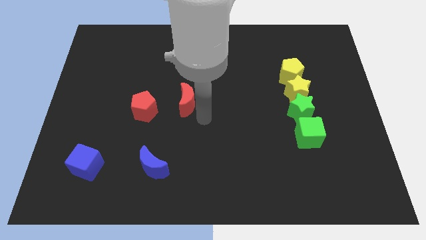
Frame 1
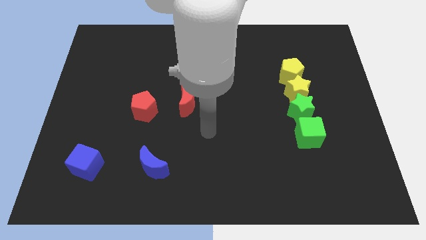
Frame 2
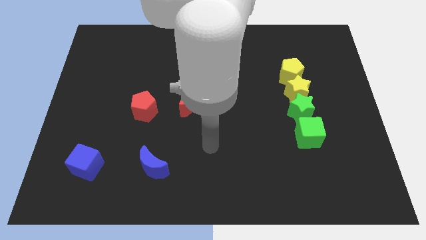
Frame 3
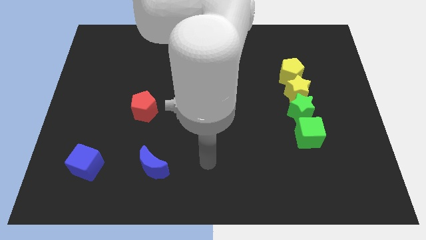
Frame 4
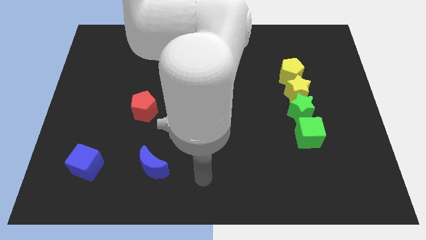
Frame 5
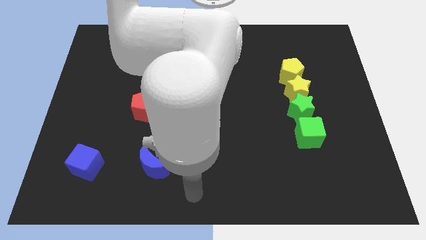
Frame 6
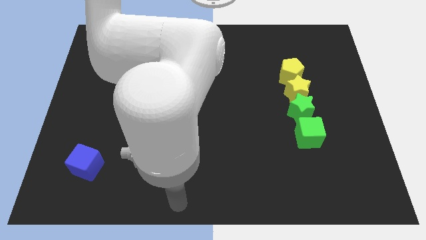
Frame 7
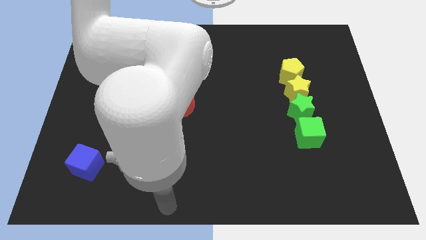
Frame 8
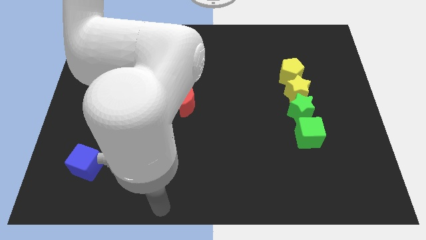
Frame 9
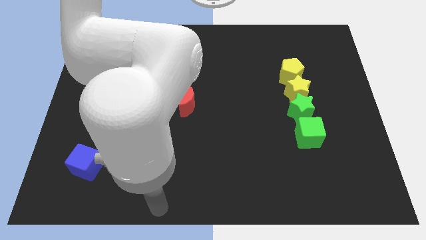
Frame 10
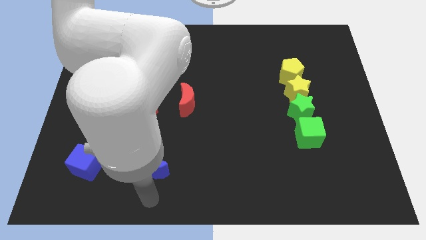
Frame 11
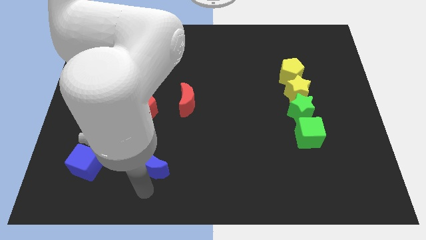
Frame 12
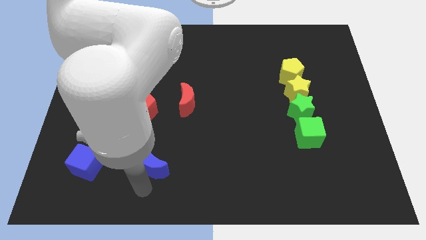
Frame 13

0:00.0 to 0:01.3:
move your hand towards the bottom of the blue crescent

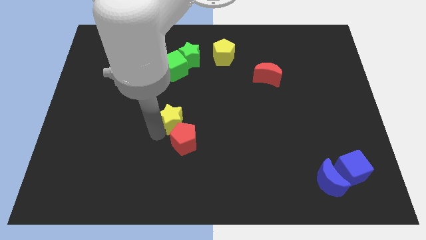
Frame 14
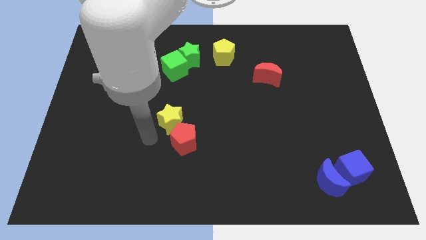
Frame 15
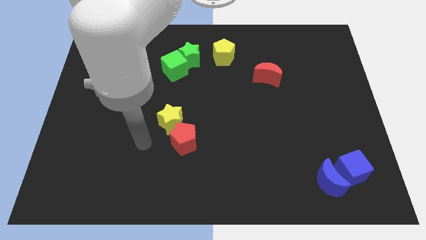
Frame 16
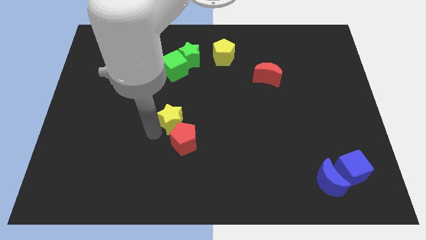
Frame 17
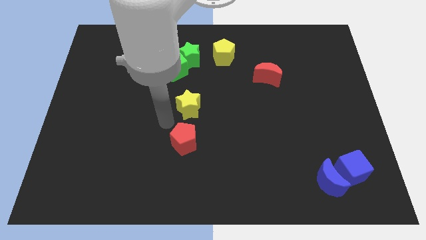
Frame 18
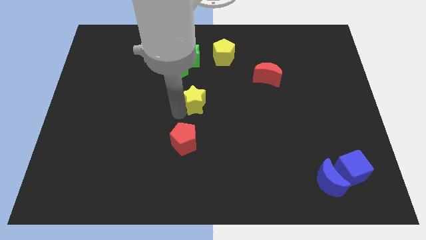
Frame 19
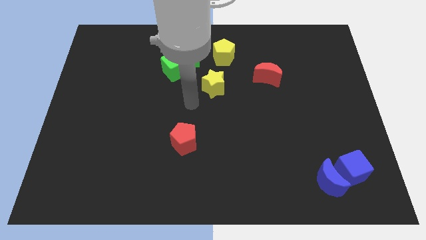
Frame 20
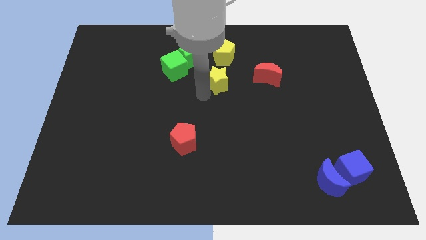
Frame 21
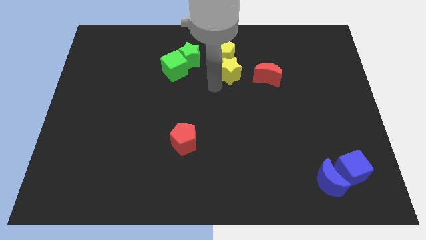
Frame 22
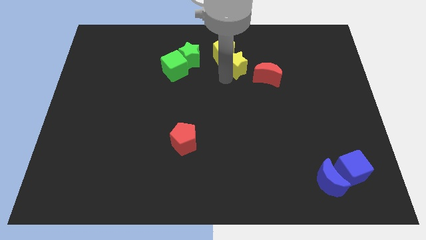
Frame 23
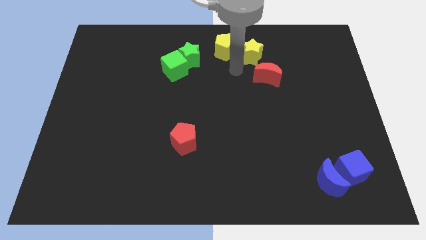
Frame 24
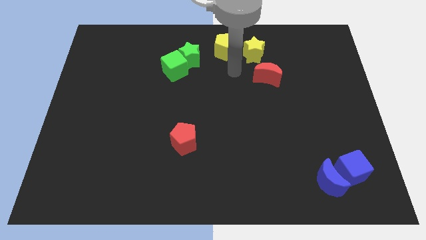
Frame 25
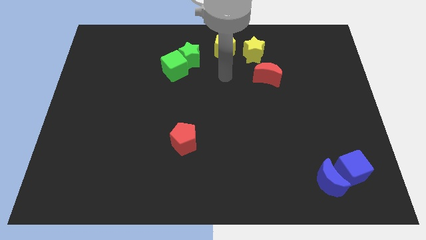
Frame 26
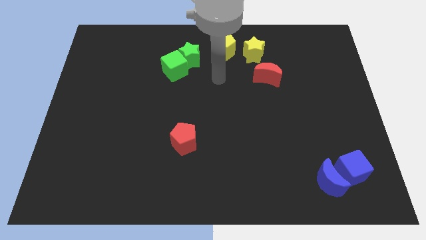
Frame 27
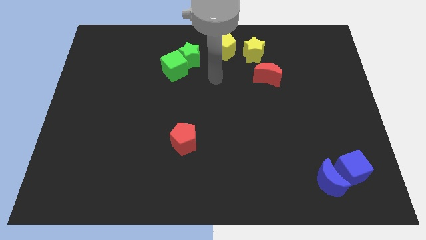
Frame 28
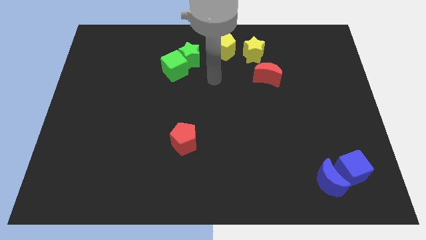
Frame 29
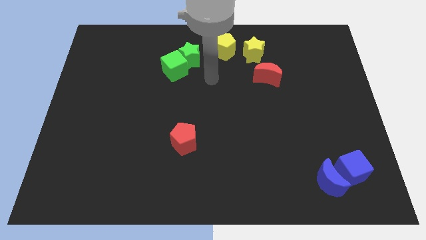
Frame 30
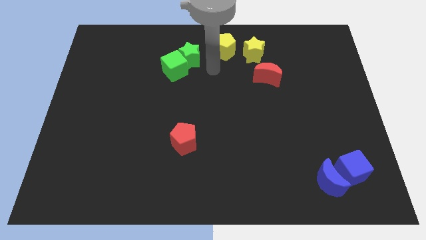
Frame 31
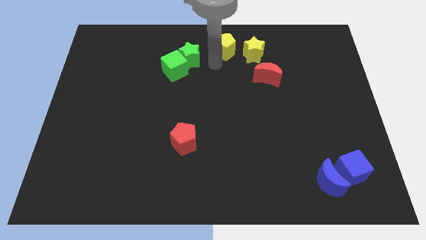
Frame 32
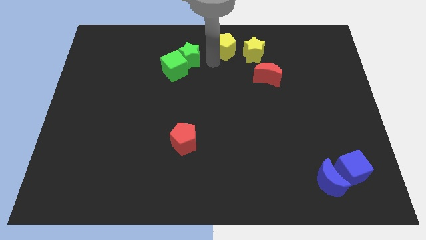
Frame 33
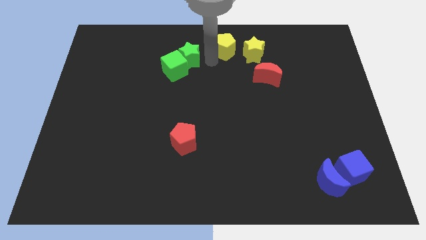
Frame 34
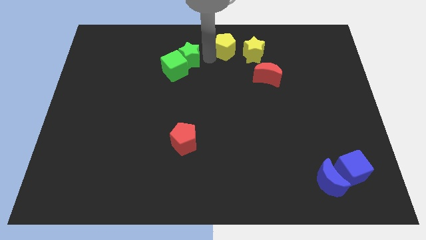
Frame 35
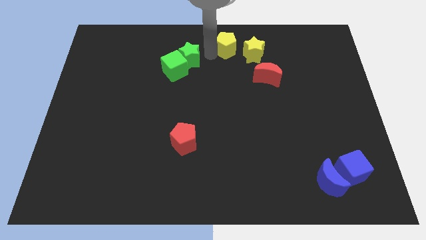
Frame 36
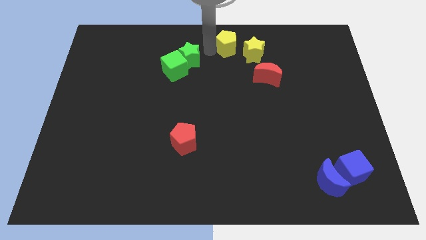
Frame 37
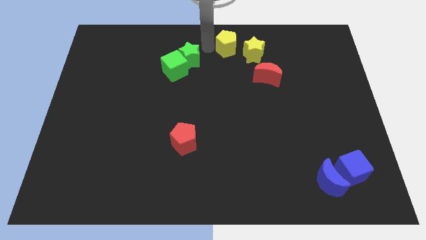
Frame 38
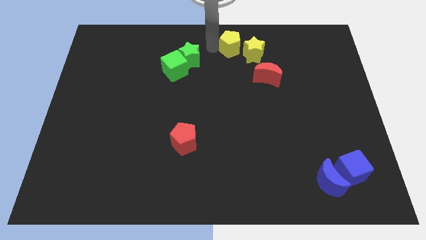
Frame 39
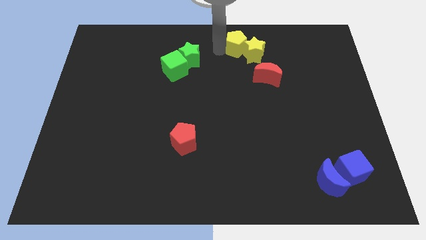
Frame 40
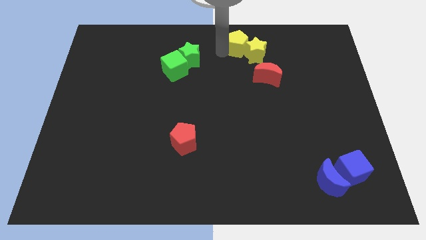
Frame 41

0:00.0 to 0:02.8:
group up the yellow blocks at the top side of the red moon

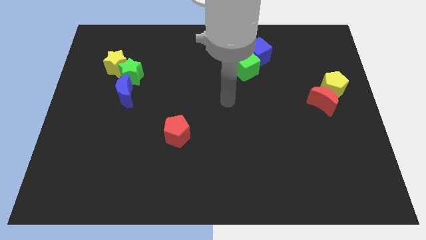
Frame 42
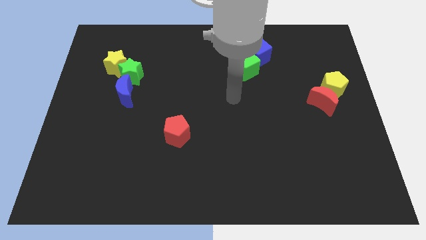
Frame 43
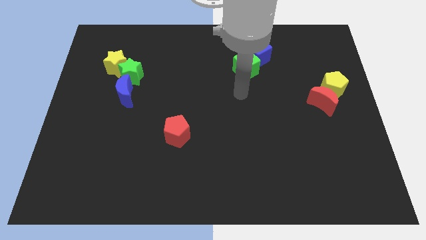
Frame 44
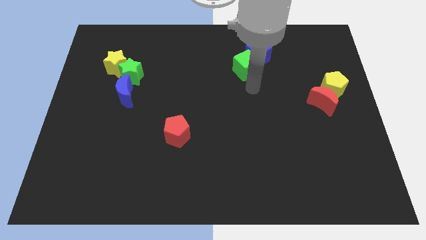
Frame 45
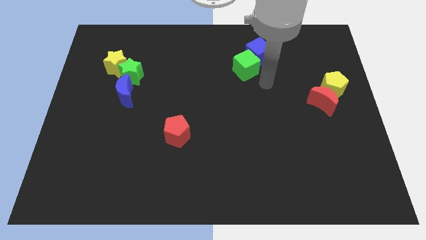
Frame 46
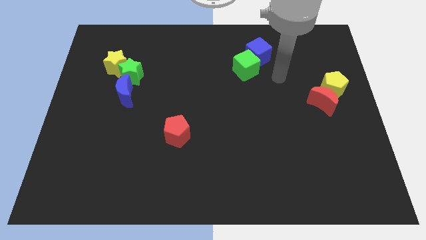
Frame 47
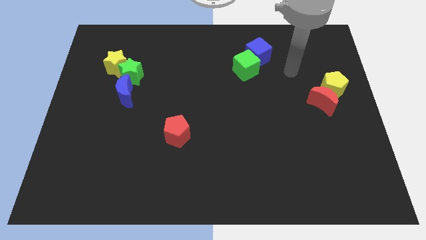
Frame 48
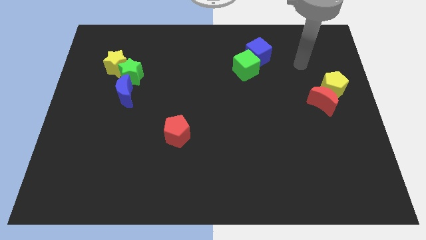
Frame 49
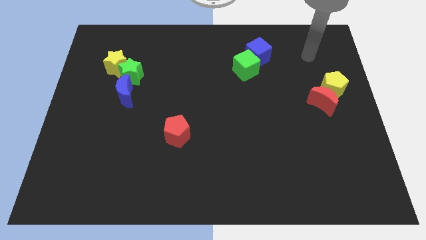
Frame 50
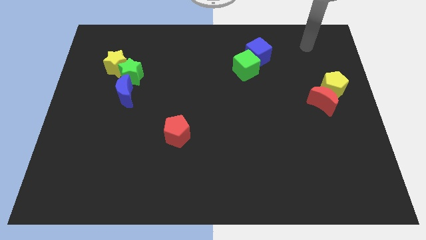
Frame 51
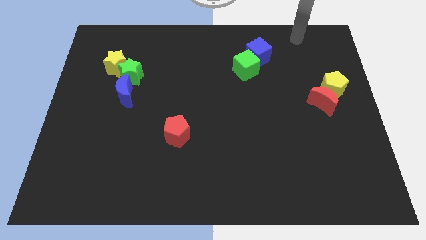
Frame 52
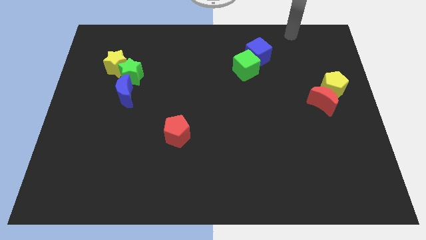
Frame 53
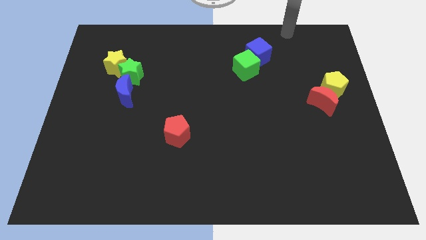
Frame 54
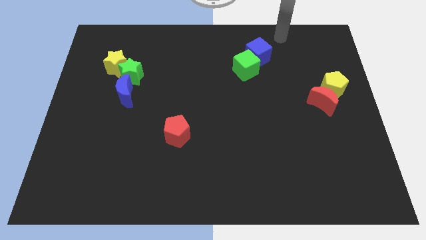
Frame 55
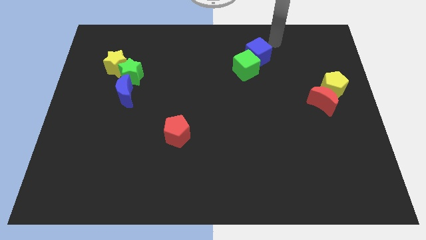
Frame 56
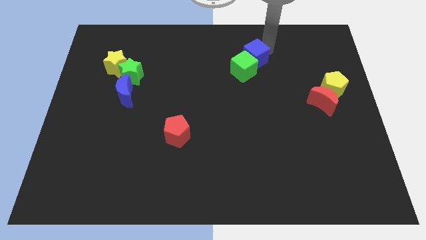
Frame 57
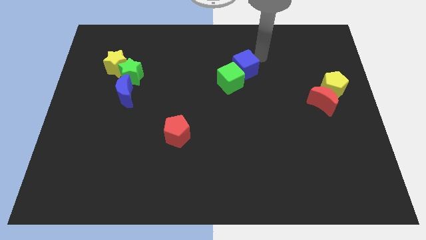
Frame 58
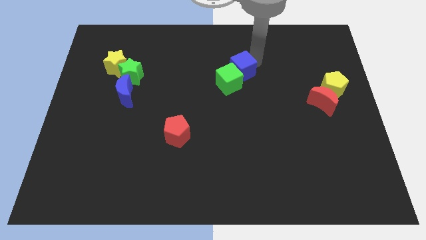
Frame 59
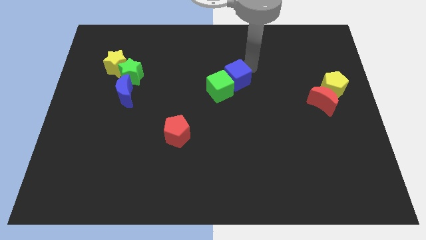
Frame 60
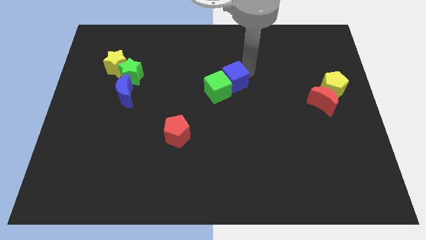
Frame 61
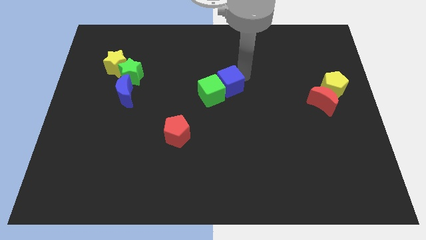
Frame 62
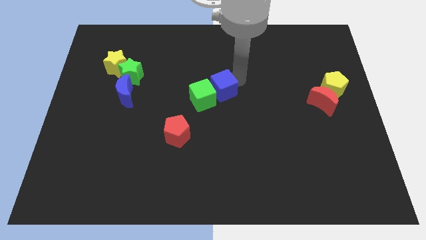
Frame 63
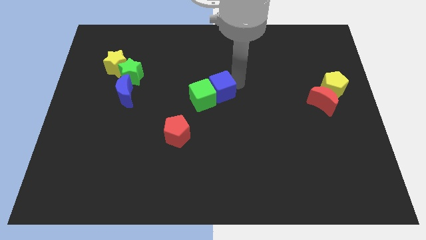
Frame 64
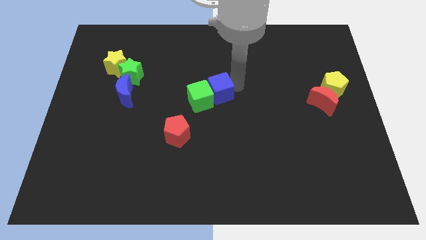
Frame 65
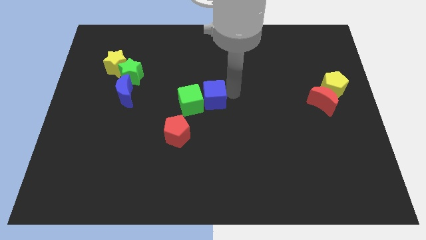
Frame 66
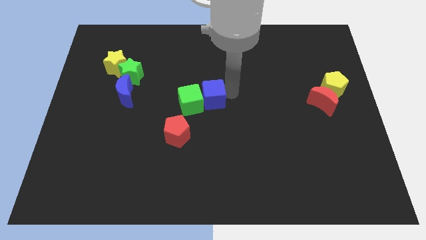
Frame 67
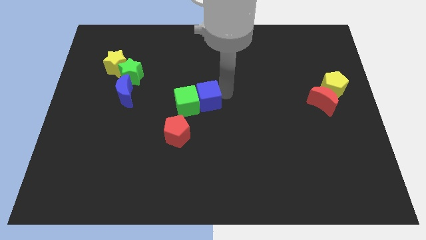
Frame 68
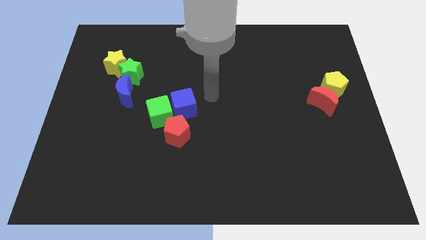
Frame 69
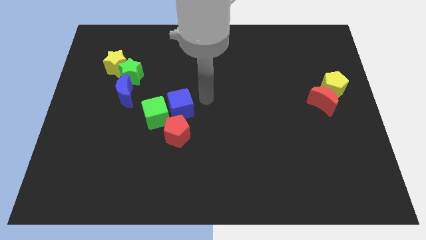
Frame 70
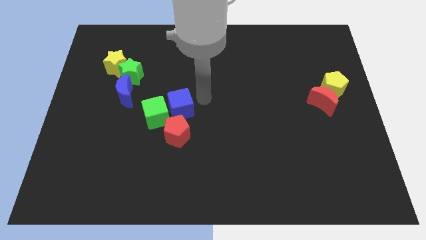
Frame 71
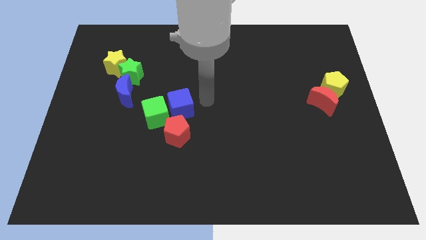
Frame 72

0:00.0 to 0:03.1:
move both the cubes diagonally above the red pentagon

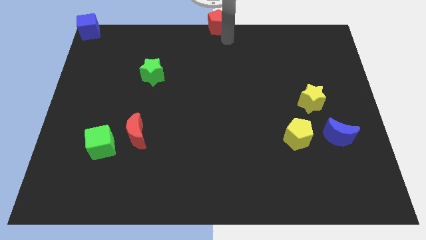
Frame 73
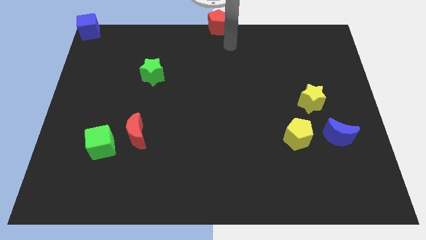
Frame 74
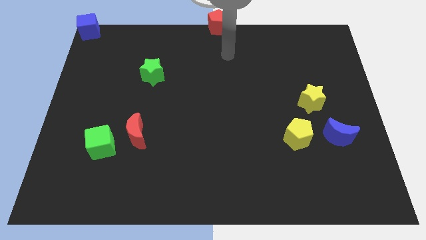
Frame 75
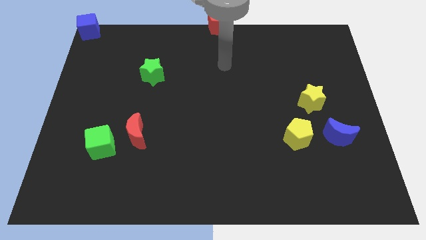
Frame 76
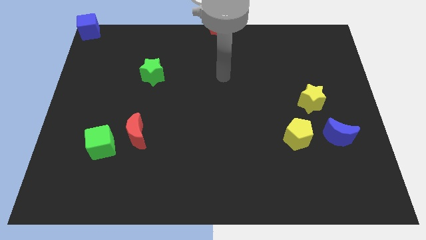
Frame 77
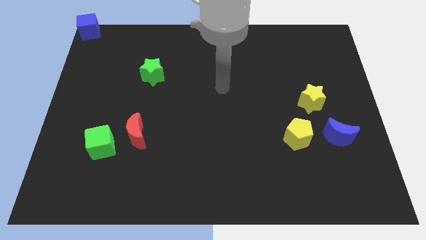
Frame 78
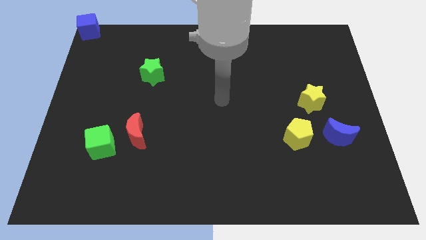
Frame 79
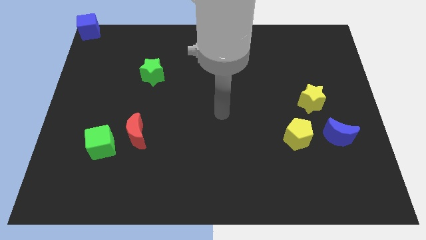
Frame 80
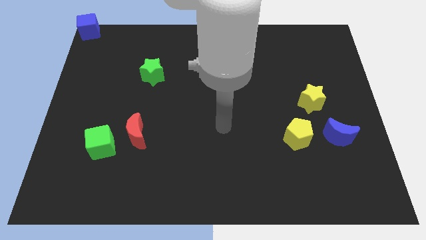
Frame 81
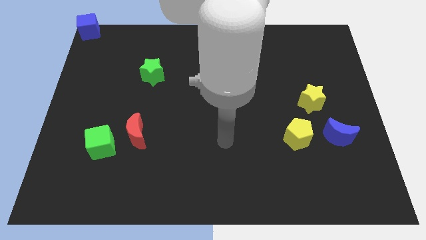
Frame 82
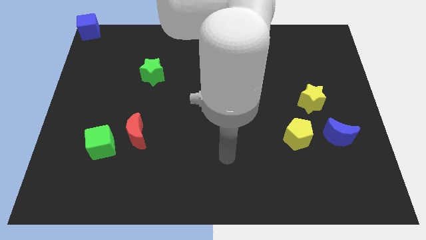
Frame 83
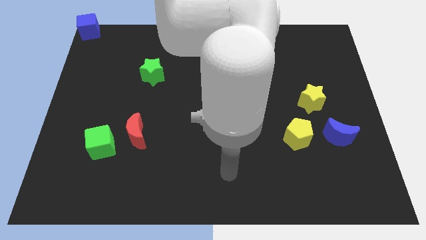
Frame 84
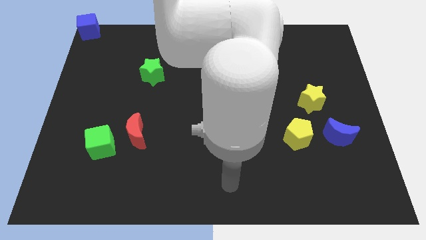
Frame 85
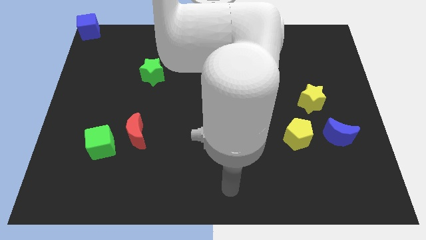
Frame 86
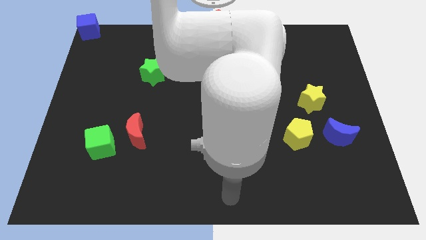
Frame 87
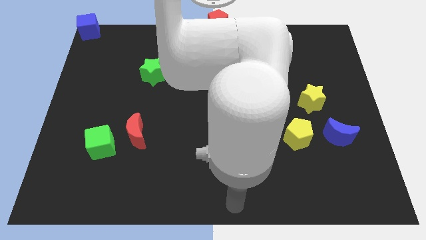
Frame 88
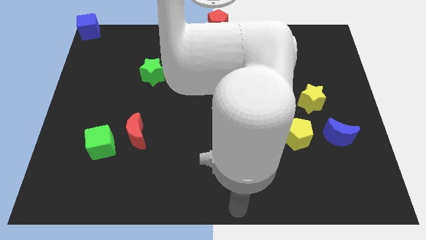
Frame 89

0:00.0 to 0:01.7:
point your arm at the bottom center of the board
